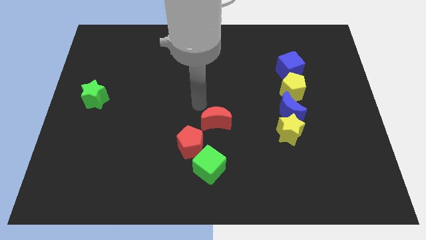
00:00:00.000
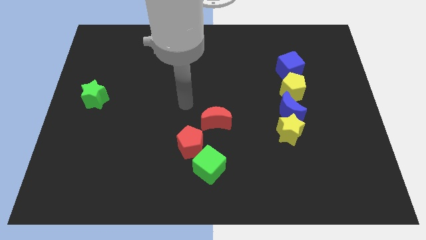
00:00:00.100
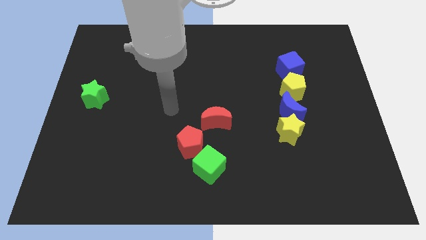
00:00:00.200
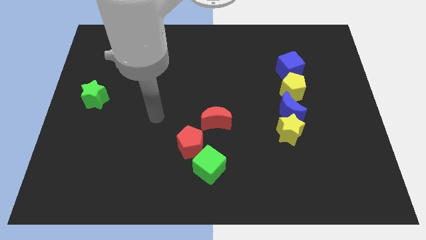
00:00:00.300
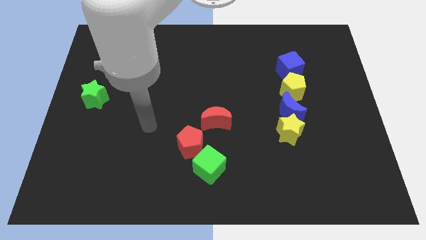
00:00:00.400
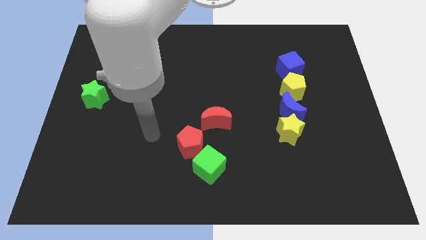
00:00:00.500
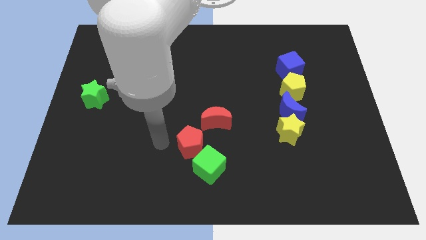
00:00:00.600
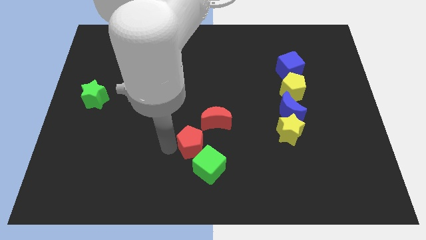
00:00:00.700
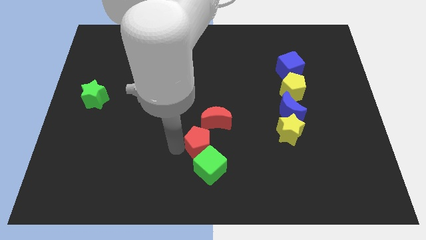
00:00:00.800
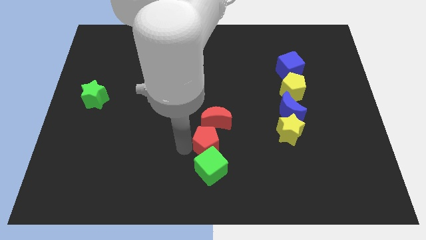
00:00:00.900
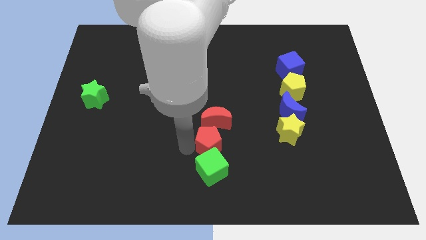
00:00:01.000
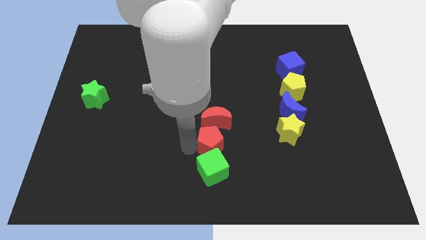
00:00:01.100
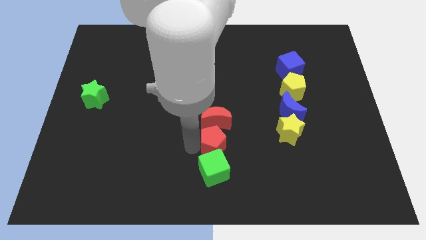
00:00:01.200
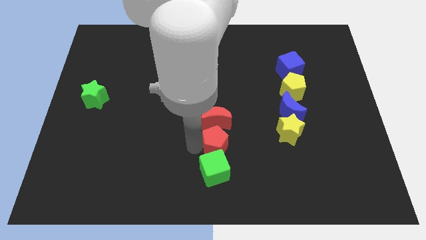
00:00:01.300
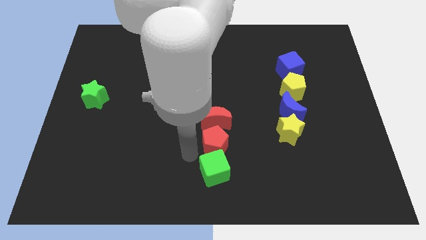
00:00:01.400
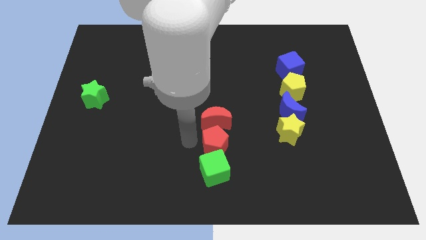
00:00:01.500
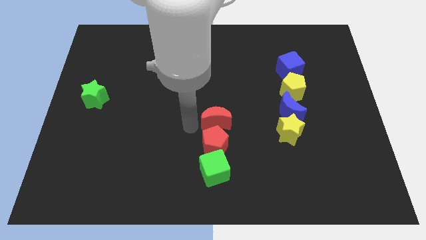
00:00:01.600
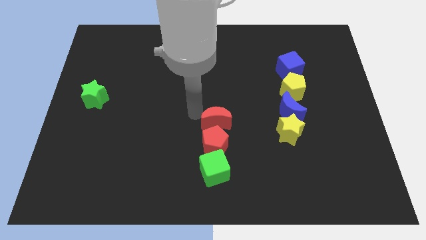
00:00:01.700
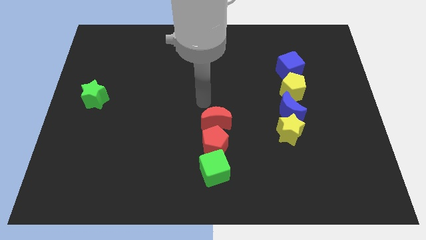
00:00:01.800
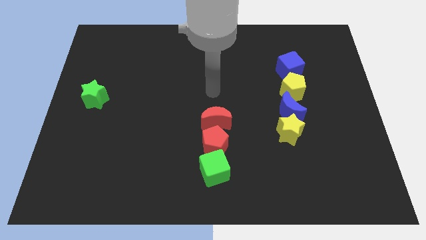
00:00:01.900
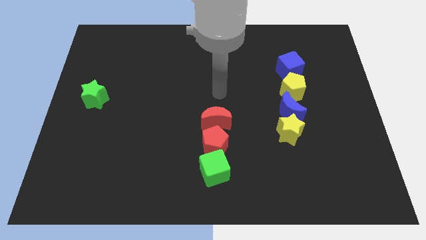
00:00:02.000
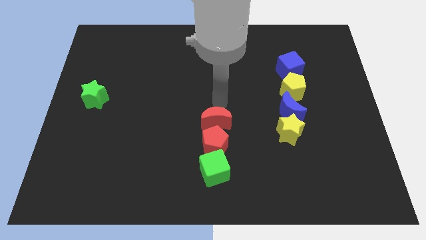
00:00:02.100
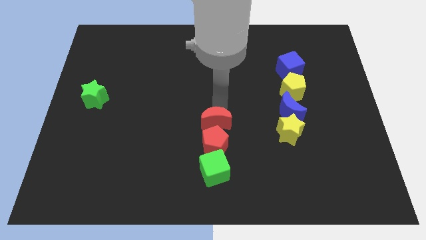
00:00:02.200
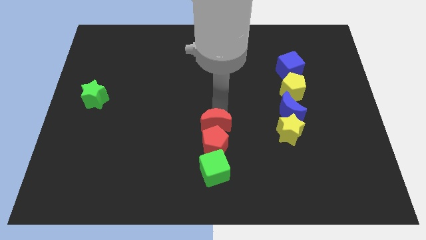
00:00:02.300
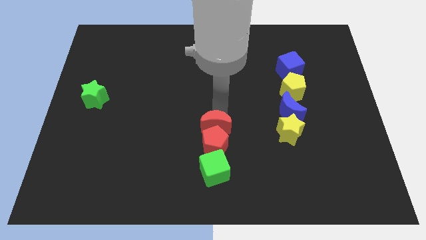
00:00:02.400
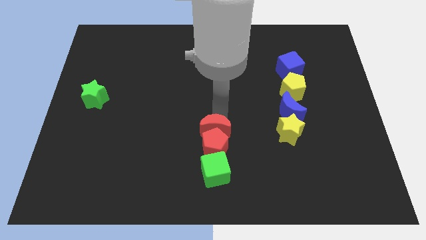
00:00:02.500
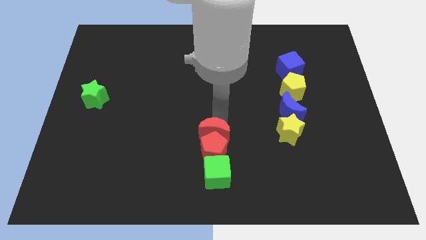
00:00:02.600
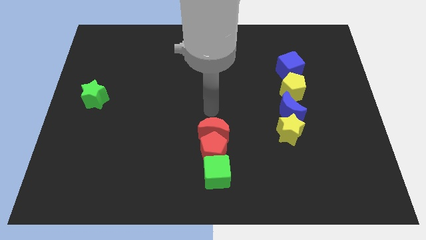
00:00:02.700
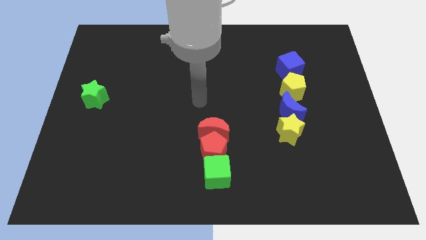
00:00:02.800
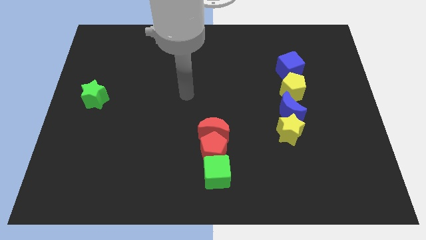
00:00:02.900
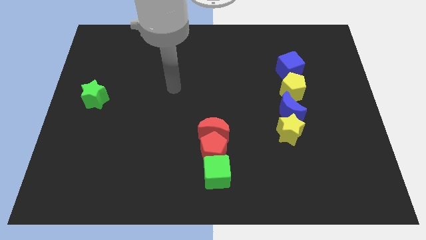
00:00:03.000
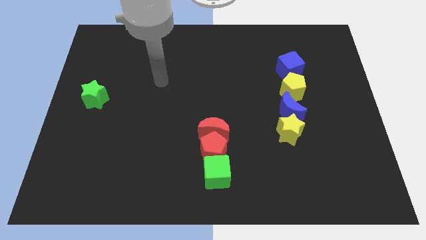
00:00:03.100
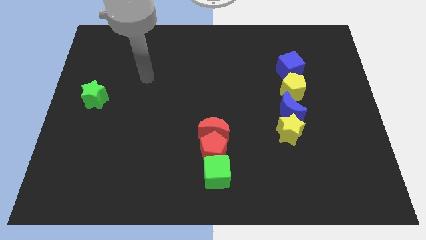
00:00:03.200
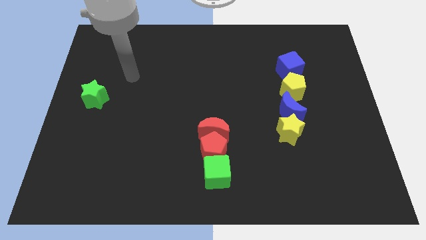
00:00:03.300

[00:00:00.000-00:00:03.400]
place the red blocks and the green cube in a vertical line

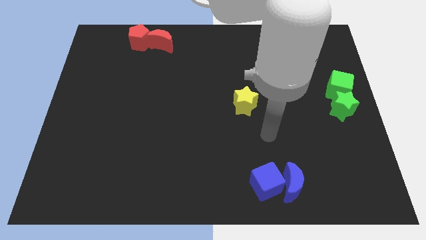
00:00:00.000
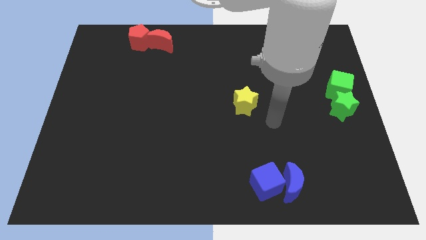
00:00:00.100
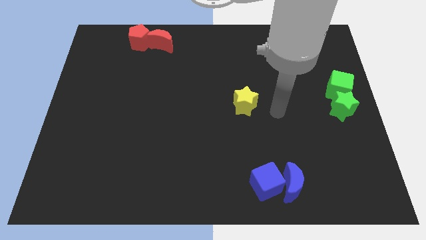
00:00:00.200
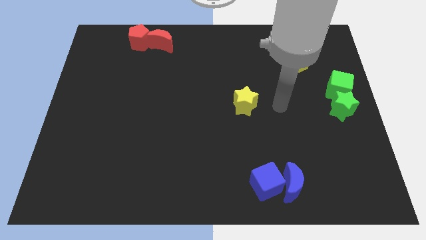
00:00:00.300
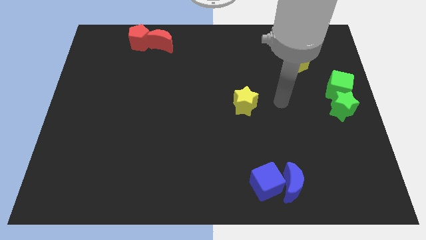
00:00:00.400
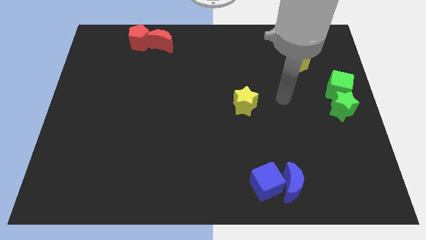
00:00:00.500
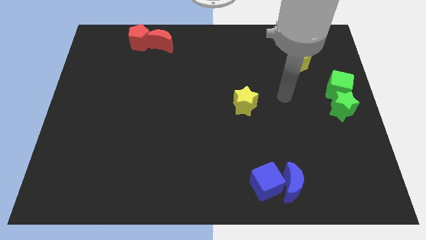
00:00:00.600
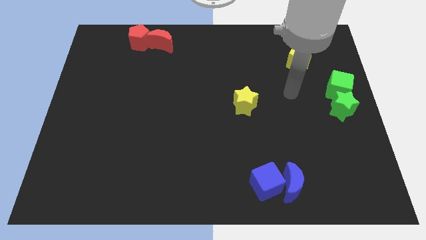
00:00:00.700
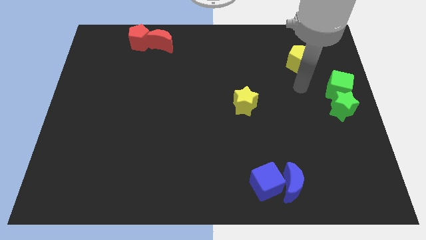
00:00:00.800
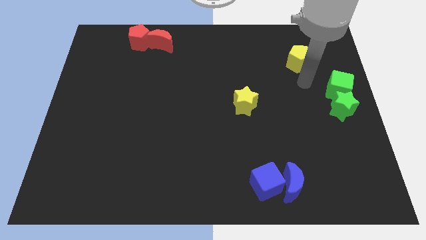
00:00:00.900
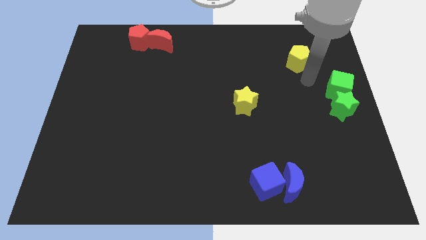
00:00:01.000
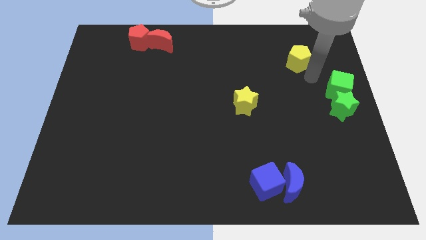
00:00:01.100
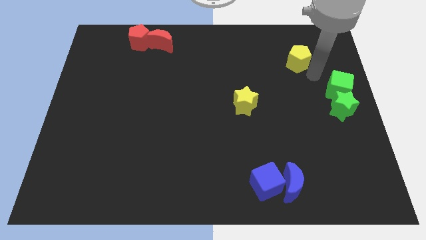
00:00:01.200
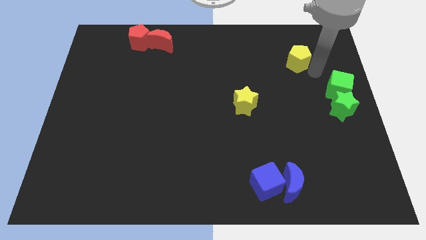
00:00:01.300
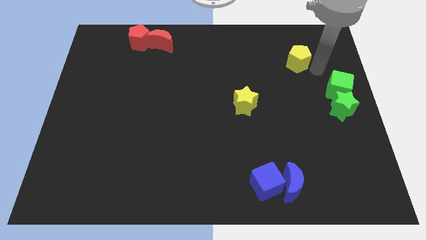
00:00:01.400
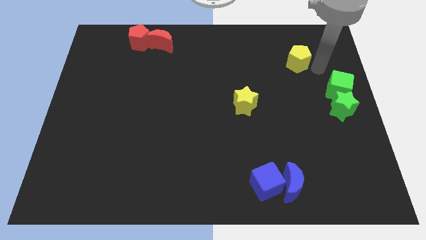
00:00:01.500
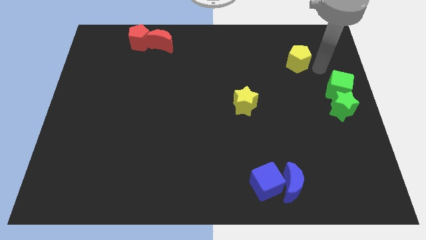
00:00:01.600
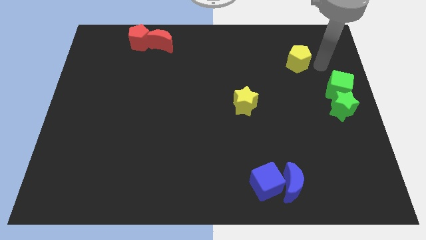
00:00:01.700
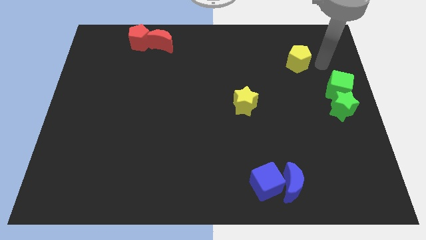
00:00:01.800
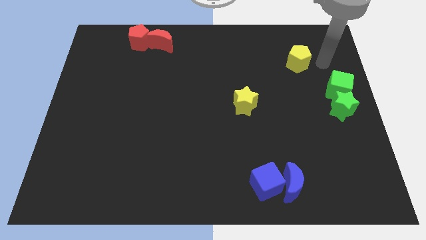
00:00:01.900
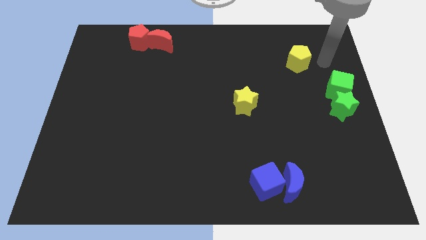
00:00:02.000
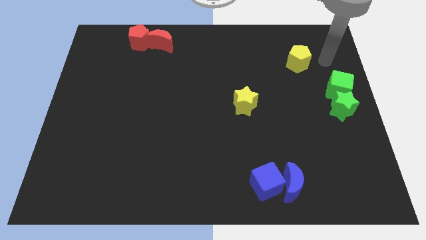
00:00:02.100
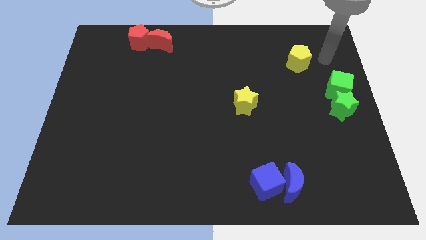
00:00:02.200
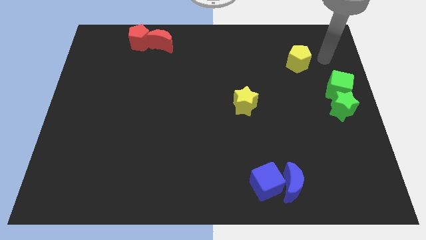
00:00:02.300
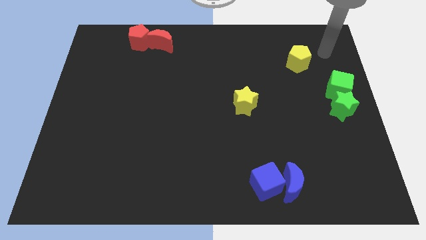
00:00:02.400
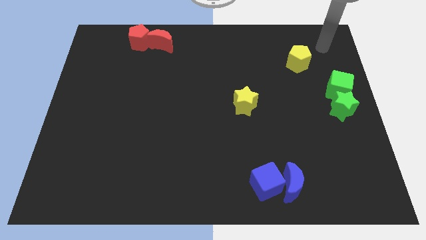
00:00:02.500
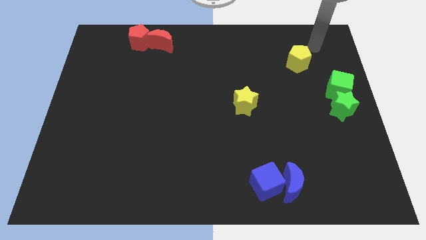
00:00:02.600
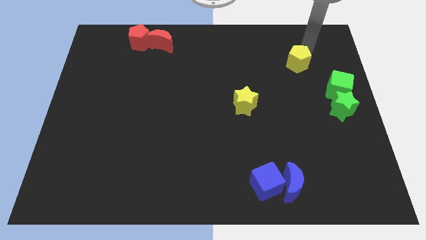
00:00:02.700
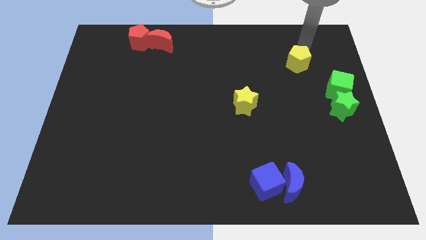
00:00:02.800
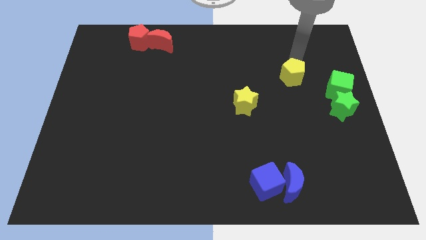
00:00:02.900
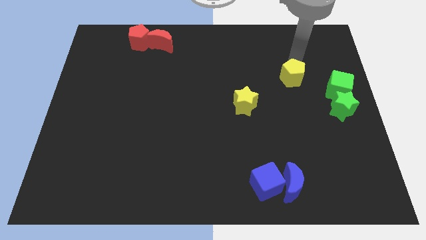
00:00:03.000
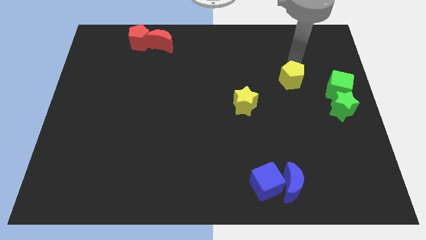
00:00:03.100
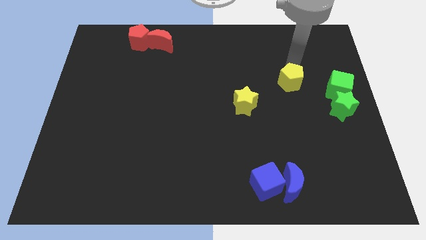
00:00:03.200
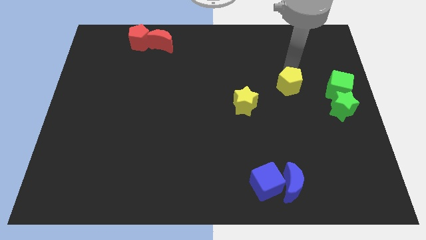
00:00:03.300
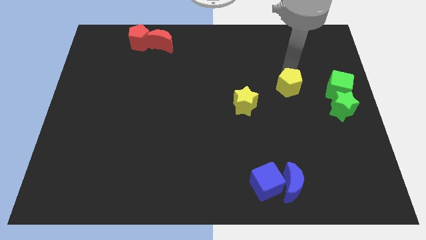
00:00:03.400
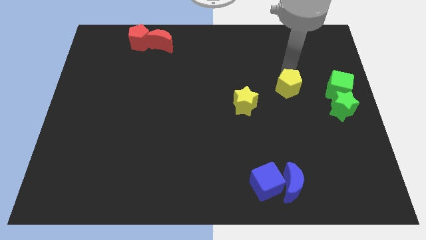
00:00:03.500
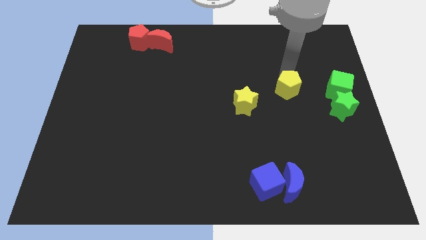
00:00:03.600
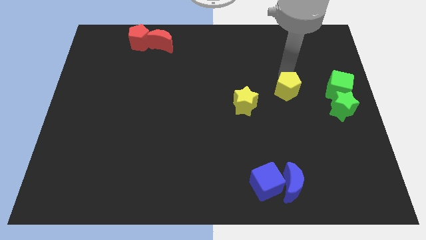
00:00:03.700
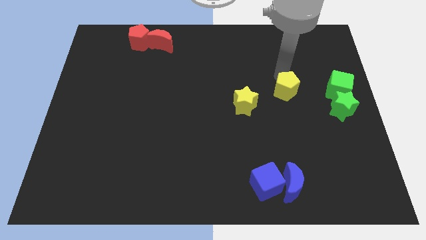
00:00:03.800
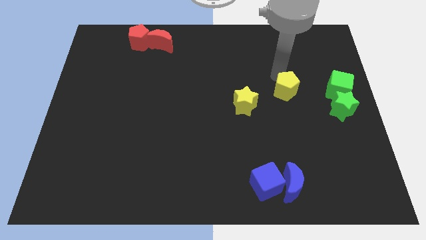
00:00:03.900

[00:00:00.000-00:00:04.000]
place the yellow pentagon in between the yellow star and green cube

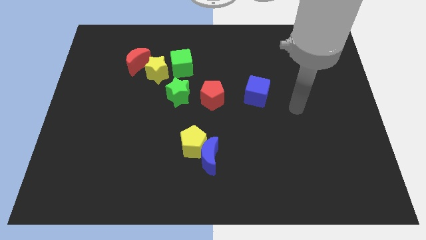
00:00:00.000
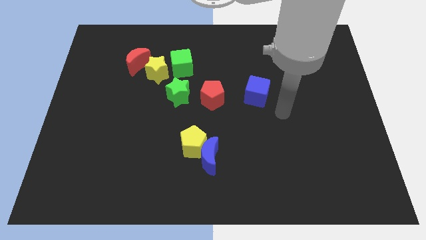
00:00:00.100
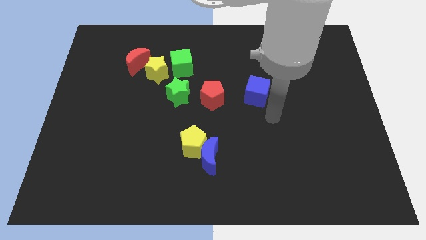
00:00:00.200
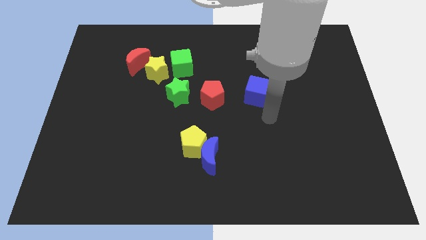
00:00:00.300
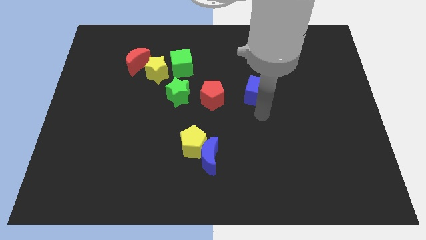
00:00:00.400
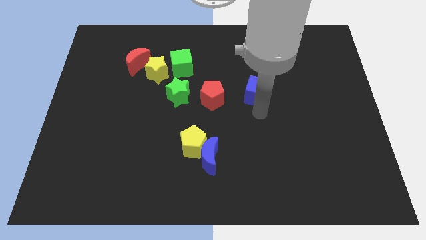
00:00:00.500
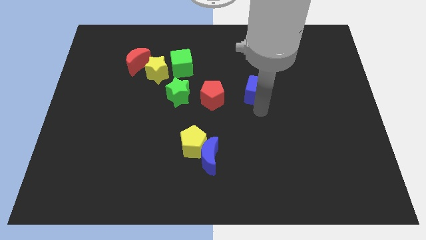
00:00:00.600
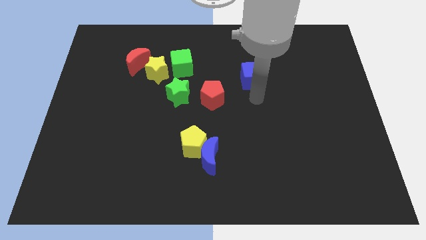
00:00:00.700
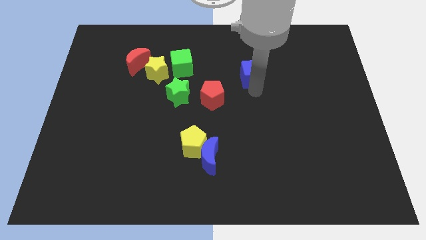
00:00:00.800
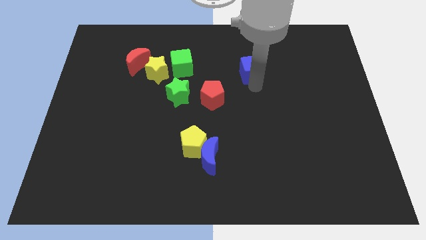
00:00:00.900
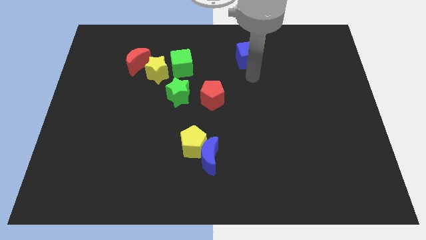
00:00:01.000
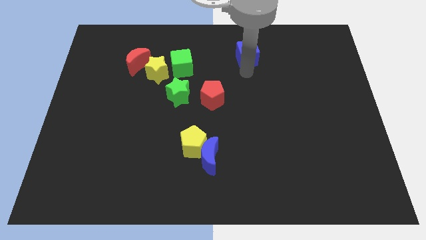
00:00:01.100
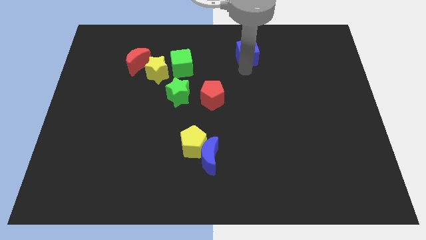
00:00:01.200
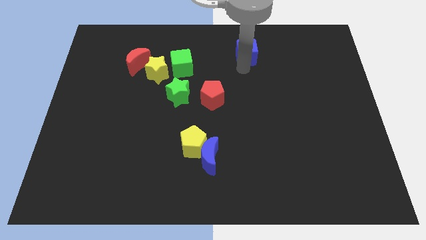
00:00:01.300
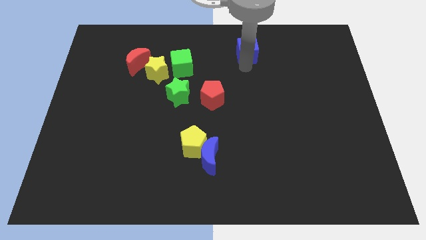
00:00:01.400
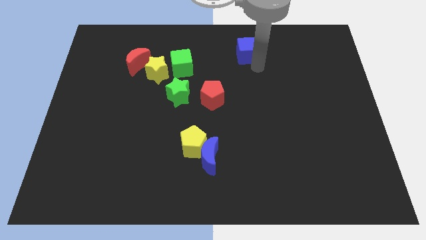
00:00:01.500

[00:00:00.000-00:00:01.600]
slide the blue cube slightly upwards
